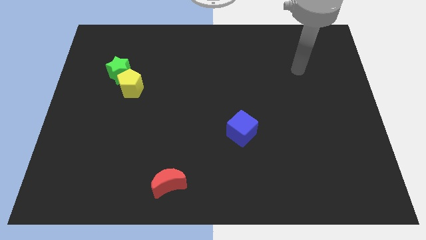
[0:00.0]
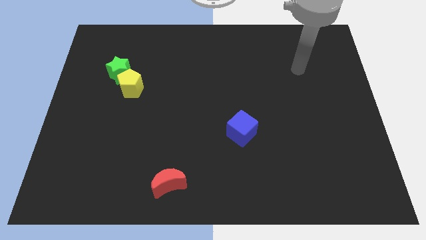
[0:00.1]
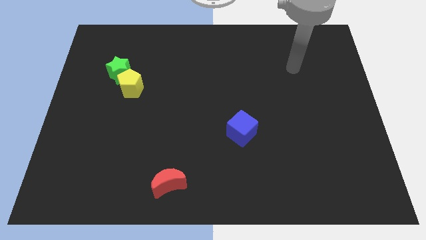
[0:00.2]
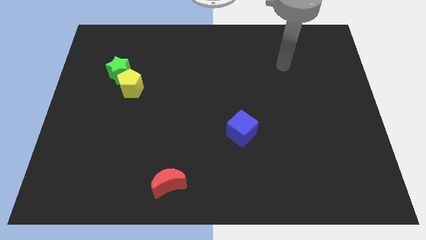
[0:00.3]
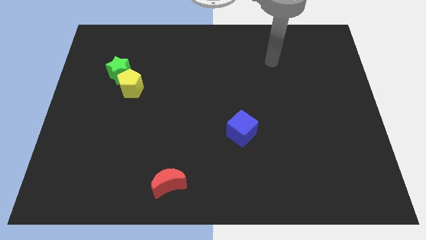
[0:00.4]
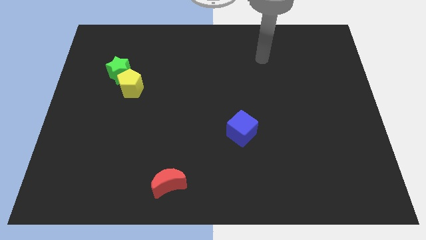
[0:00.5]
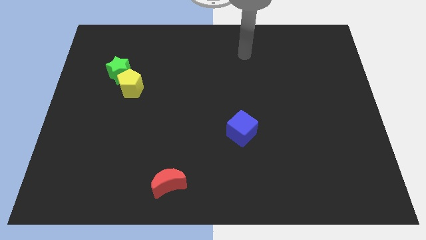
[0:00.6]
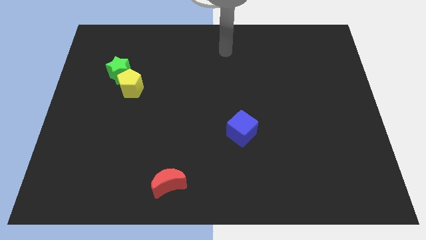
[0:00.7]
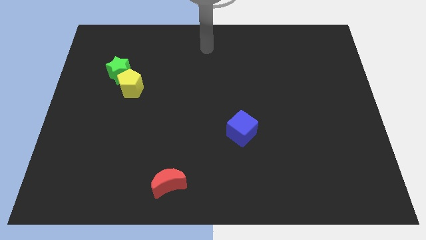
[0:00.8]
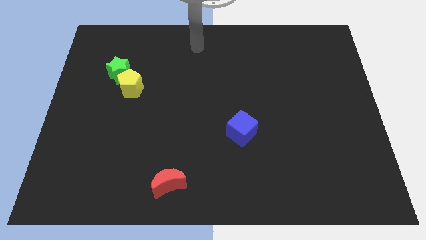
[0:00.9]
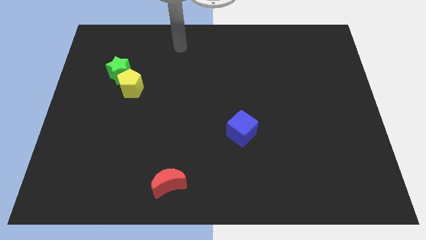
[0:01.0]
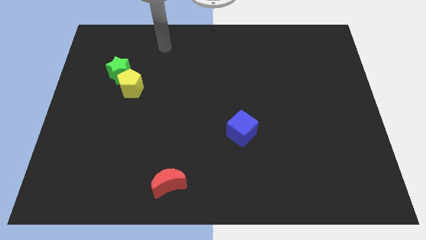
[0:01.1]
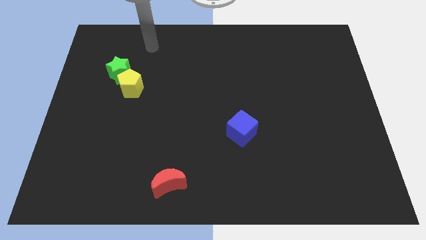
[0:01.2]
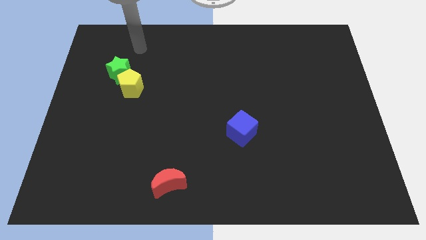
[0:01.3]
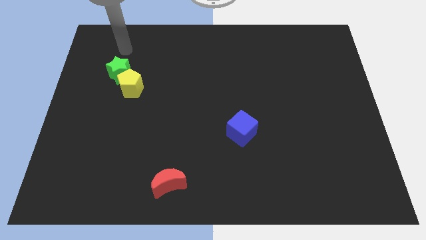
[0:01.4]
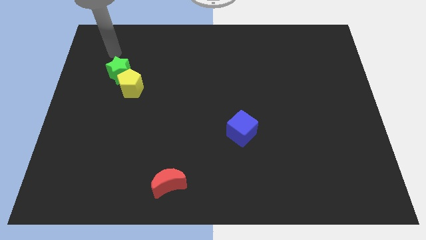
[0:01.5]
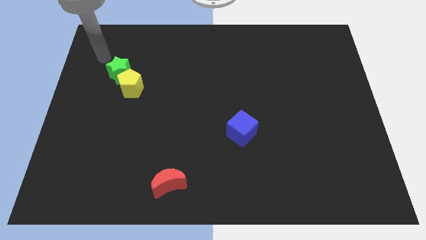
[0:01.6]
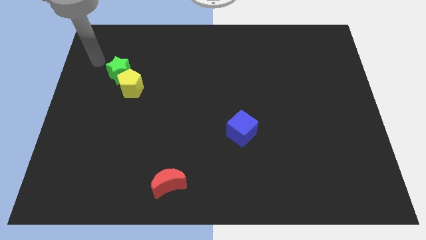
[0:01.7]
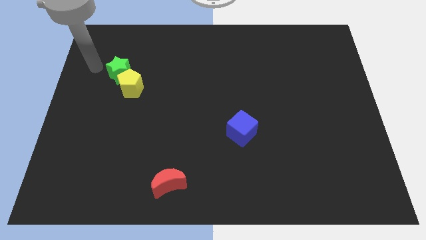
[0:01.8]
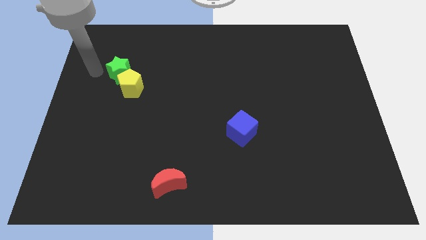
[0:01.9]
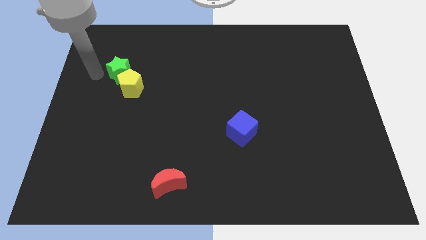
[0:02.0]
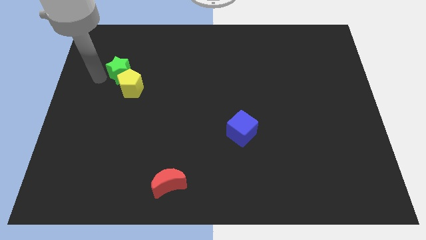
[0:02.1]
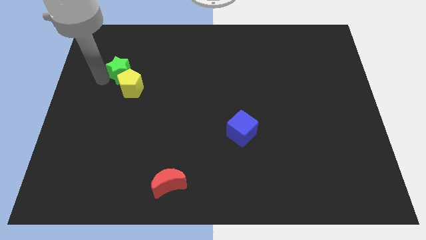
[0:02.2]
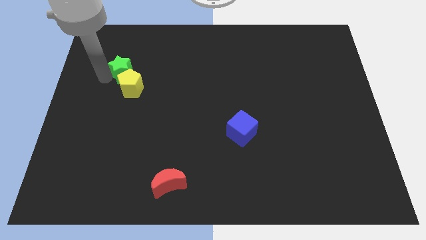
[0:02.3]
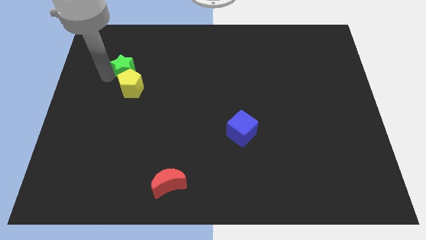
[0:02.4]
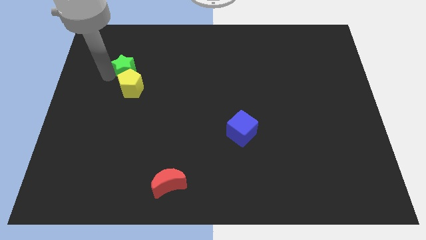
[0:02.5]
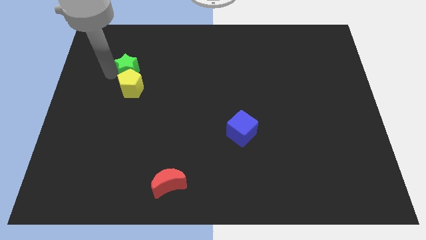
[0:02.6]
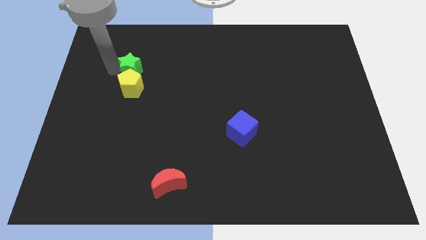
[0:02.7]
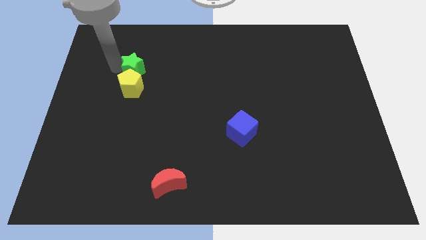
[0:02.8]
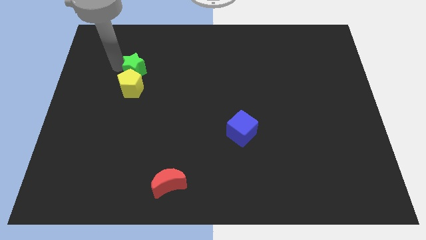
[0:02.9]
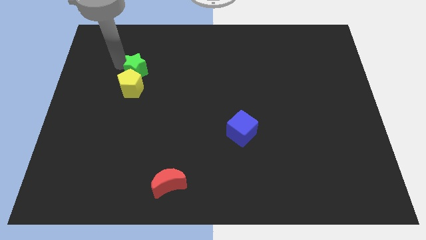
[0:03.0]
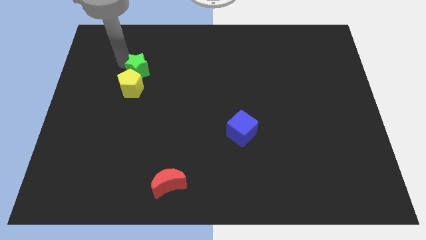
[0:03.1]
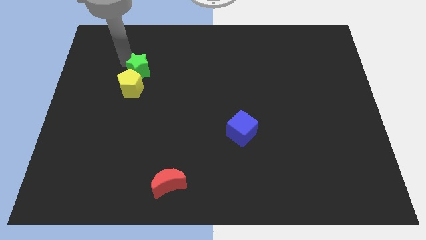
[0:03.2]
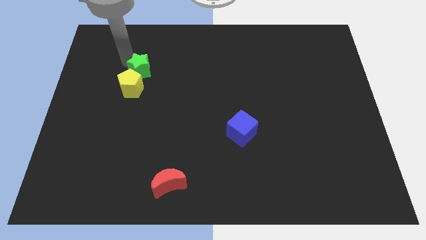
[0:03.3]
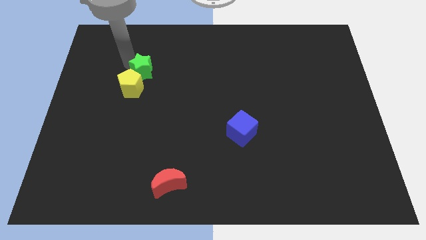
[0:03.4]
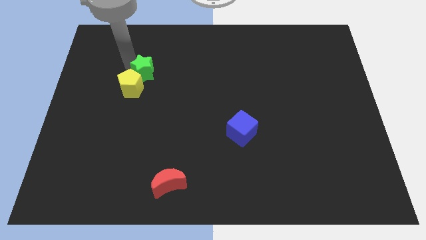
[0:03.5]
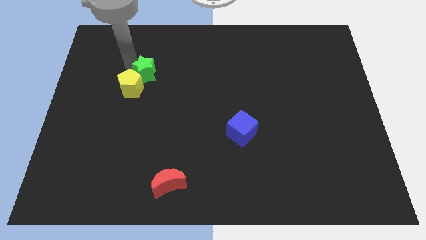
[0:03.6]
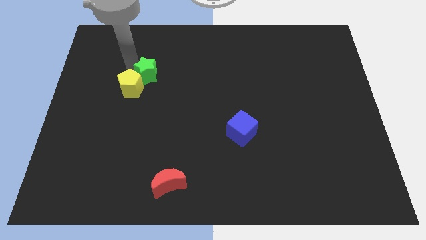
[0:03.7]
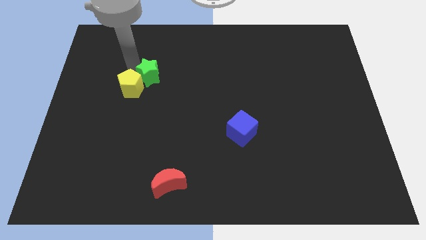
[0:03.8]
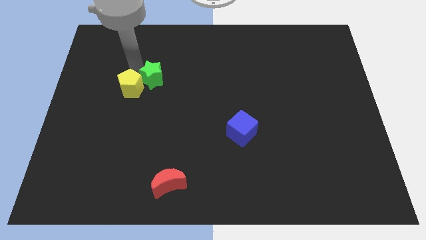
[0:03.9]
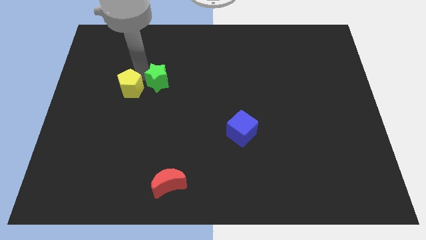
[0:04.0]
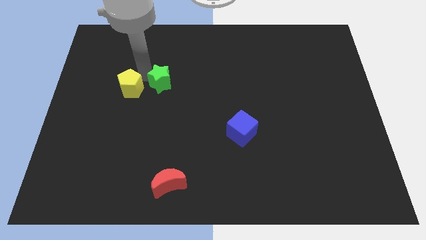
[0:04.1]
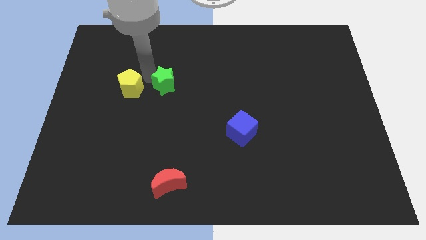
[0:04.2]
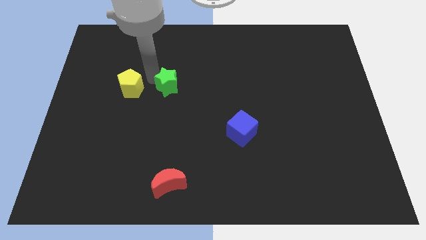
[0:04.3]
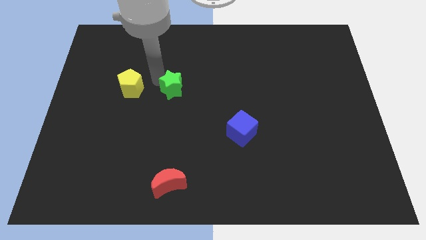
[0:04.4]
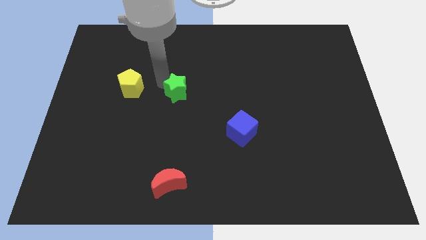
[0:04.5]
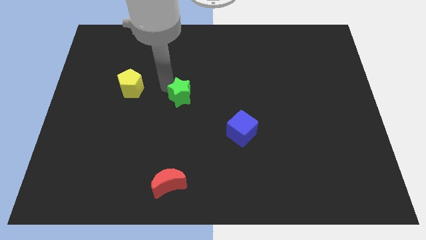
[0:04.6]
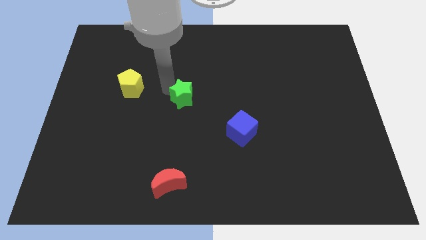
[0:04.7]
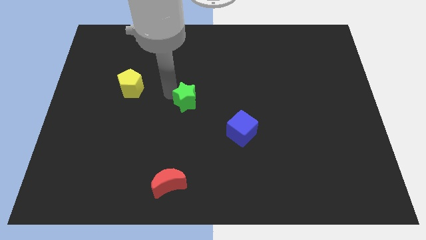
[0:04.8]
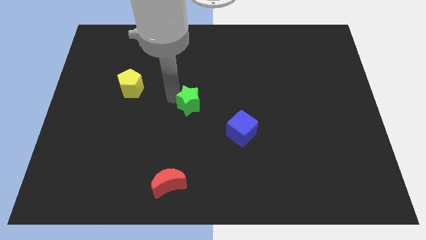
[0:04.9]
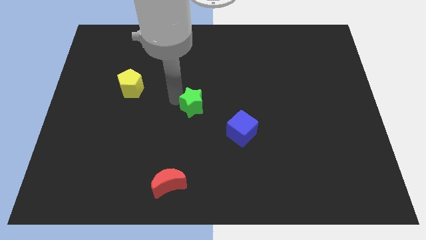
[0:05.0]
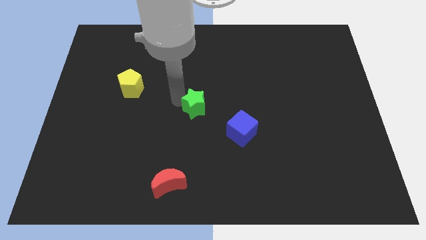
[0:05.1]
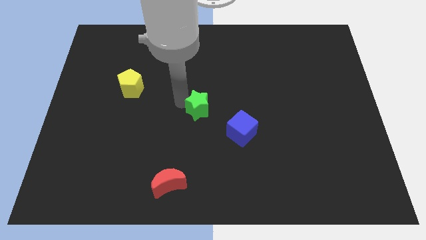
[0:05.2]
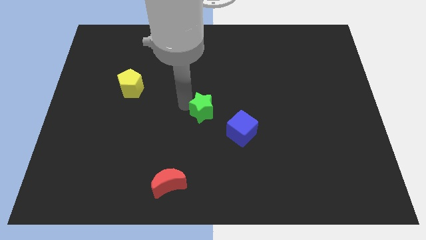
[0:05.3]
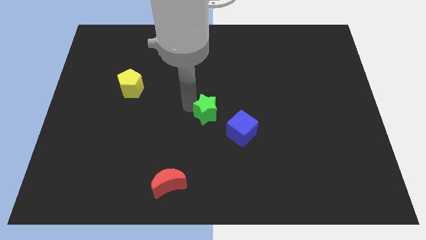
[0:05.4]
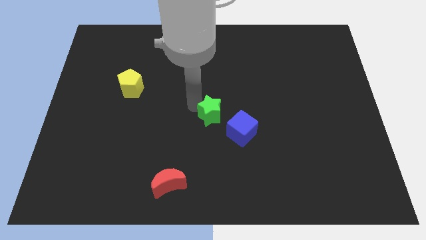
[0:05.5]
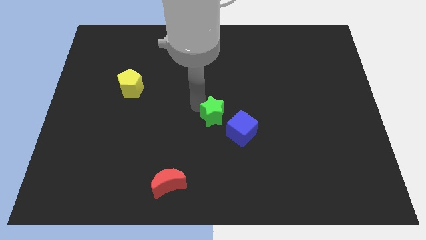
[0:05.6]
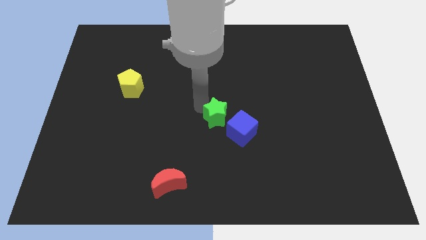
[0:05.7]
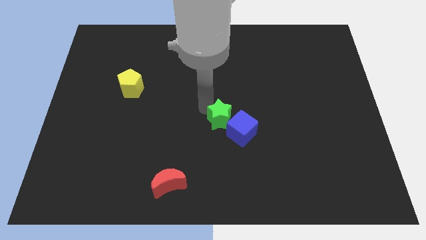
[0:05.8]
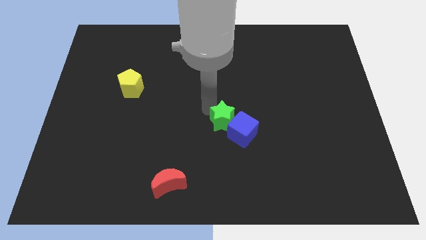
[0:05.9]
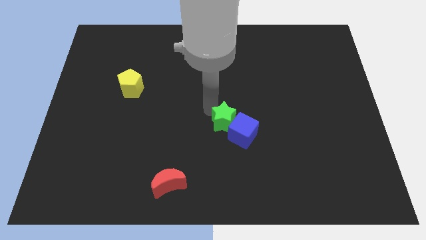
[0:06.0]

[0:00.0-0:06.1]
push the green block next to the blue block

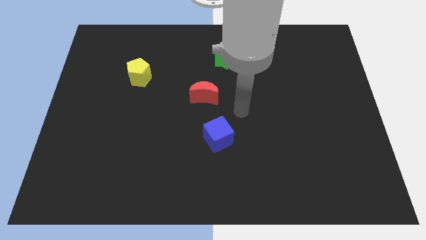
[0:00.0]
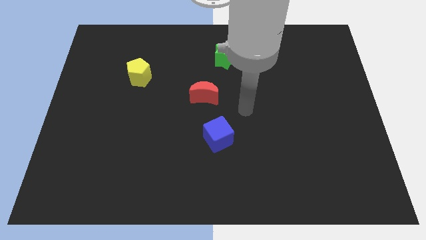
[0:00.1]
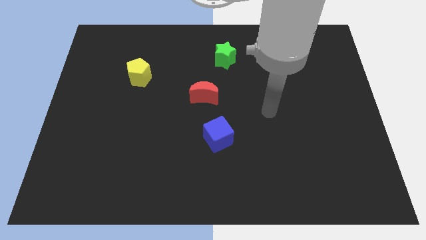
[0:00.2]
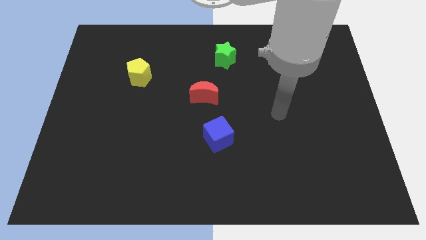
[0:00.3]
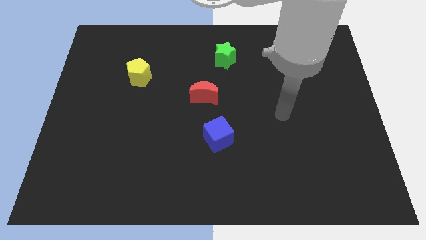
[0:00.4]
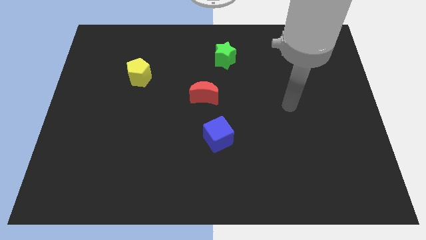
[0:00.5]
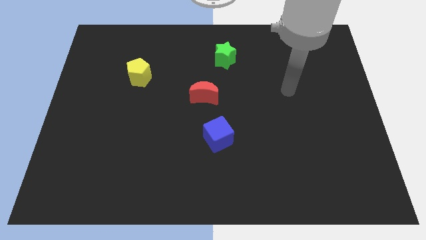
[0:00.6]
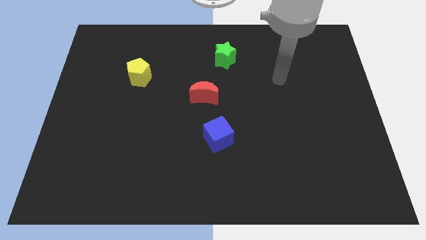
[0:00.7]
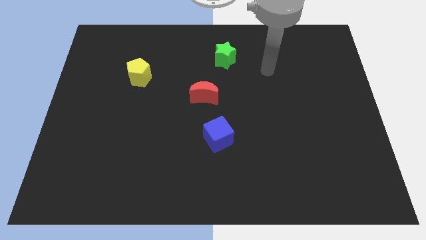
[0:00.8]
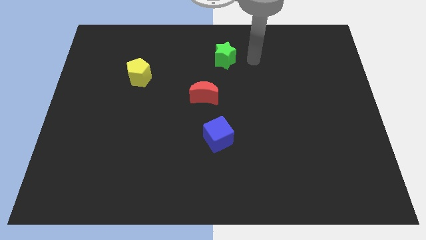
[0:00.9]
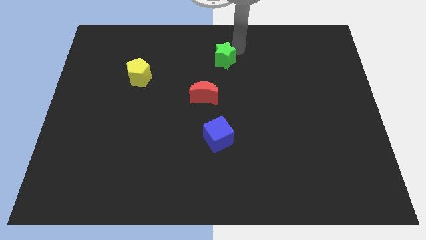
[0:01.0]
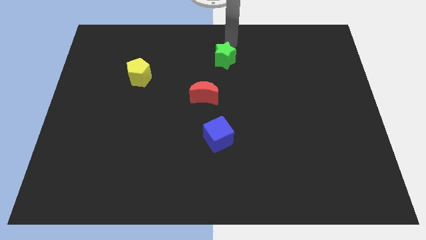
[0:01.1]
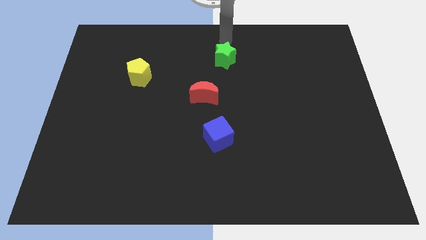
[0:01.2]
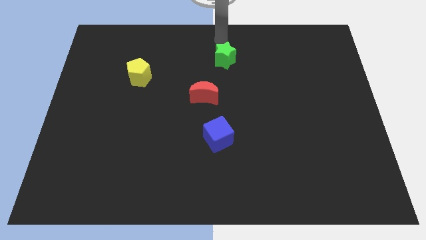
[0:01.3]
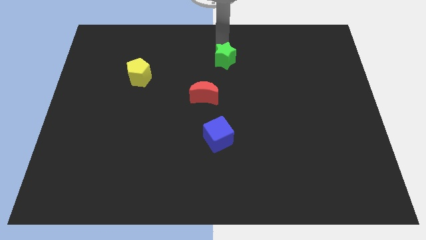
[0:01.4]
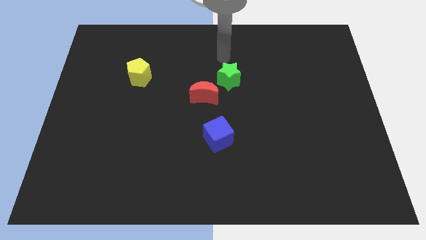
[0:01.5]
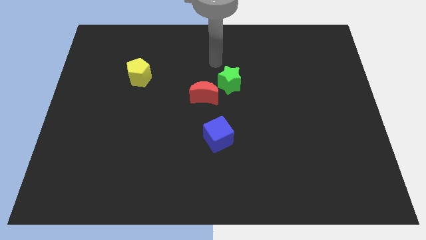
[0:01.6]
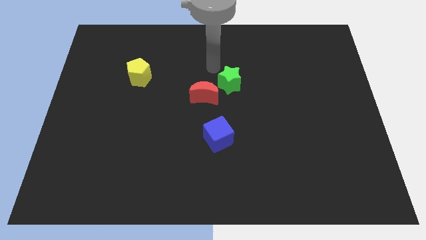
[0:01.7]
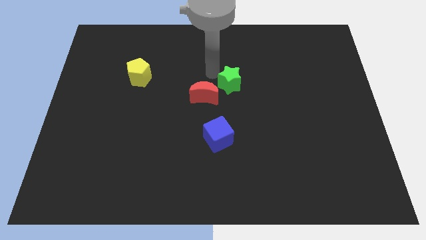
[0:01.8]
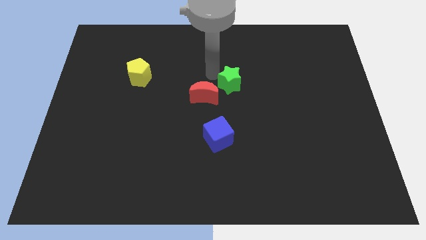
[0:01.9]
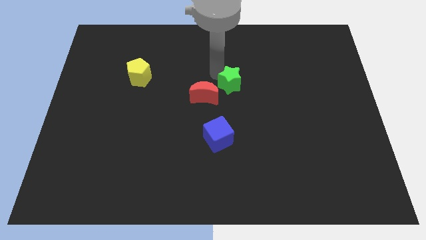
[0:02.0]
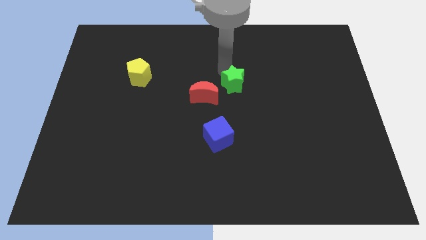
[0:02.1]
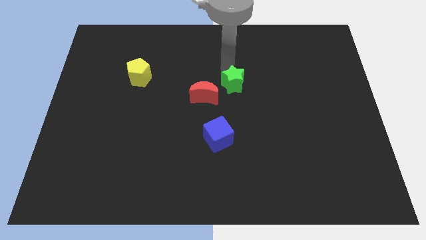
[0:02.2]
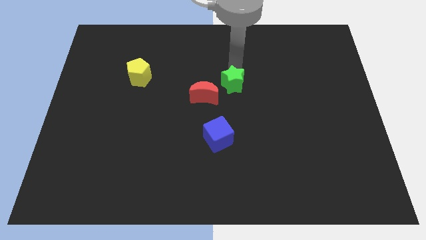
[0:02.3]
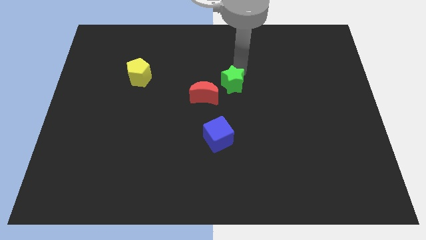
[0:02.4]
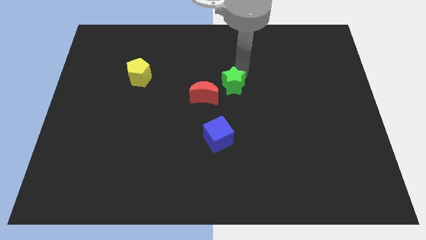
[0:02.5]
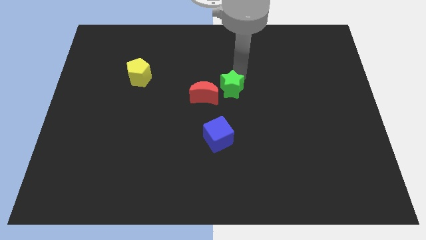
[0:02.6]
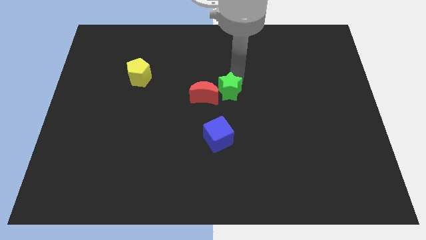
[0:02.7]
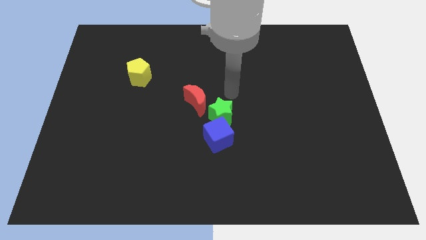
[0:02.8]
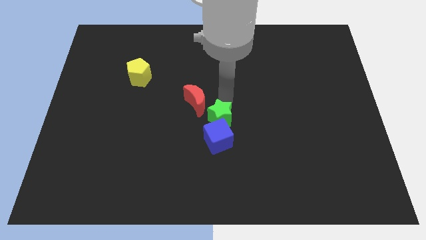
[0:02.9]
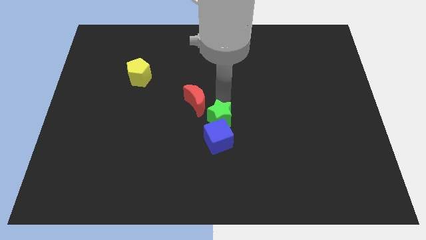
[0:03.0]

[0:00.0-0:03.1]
put the star next to the blue block
